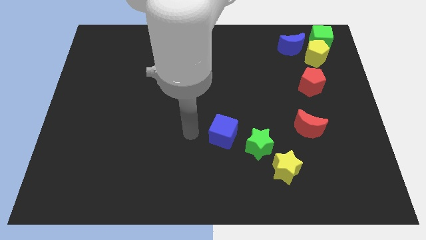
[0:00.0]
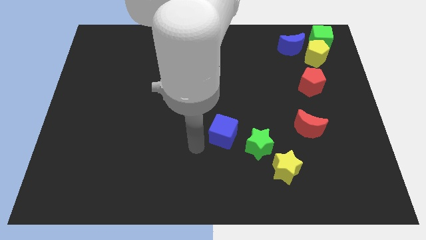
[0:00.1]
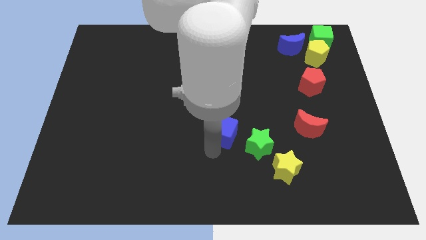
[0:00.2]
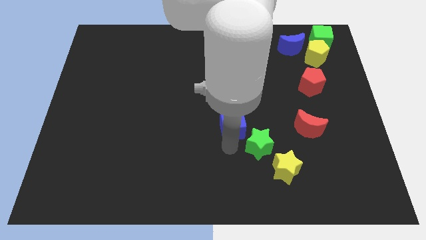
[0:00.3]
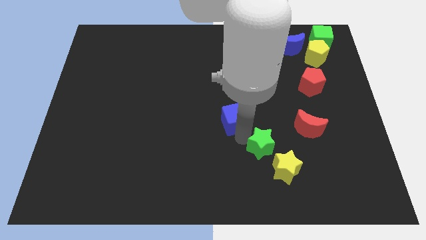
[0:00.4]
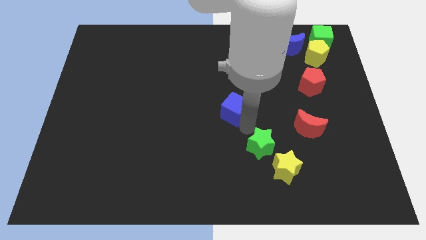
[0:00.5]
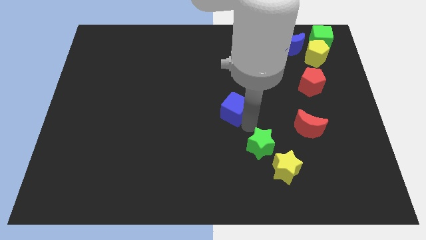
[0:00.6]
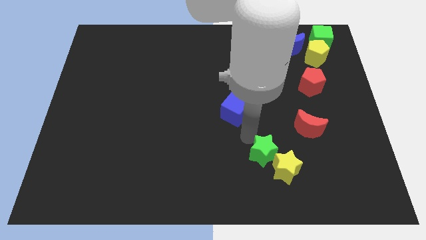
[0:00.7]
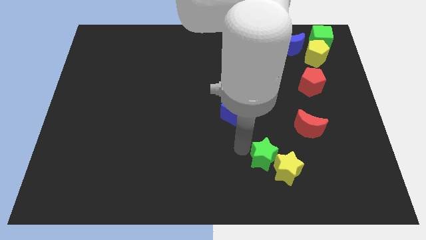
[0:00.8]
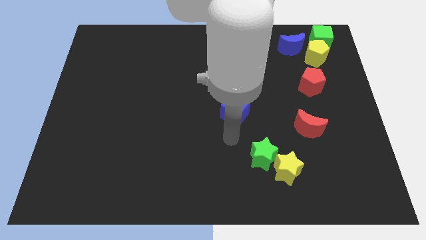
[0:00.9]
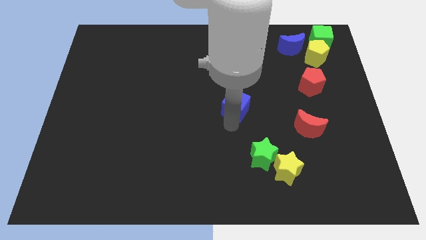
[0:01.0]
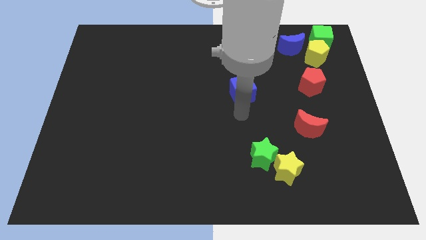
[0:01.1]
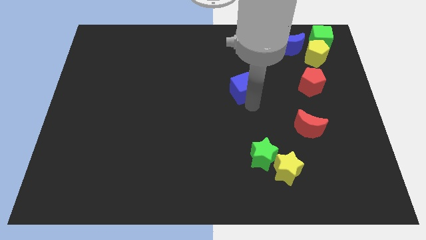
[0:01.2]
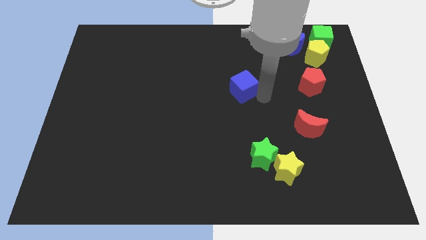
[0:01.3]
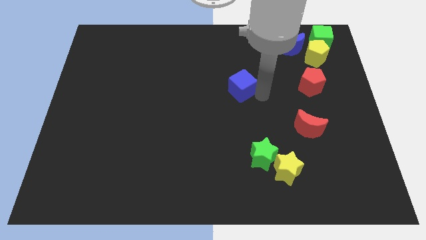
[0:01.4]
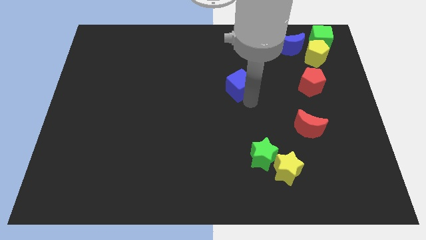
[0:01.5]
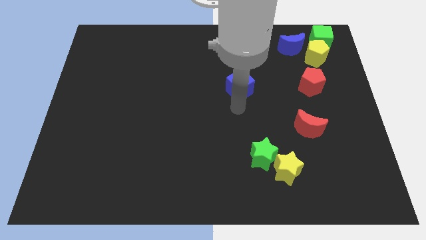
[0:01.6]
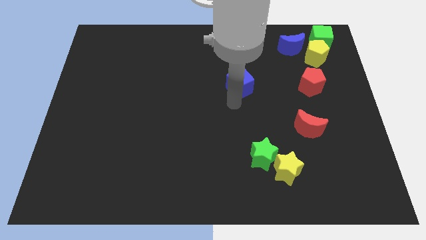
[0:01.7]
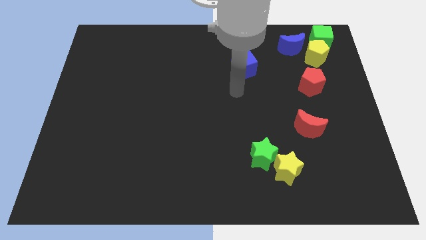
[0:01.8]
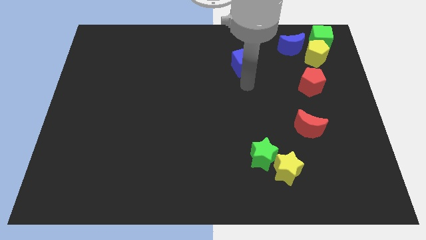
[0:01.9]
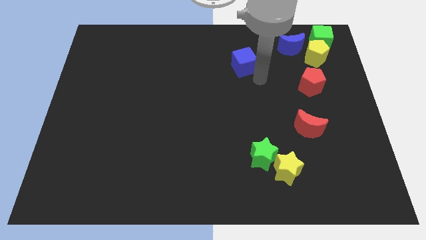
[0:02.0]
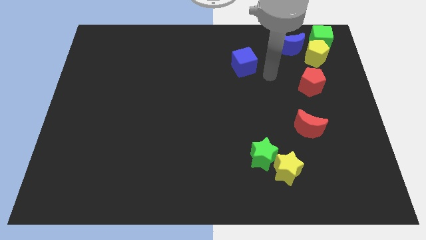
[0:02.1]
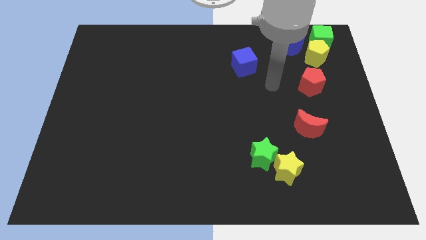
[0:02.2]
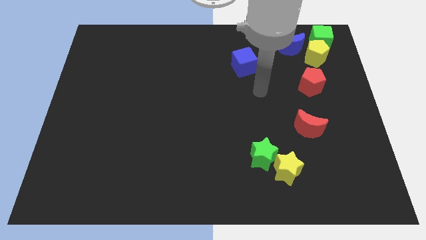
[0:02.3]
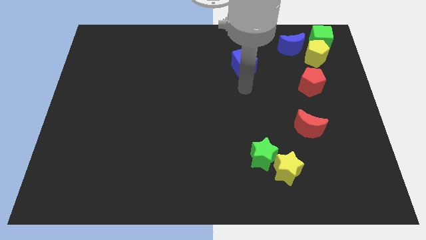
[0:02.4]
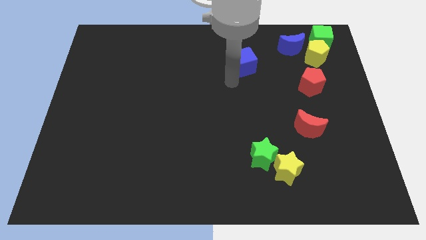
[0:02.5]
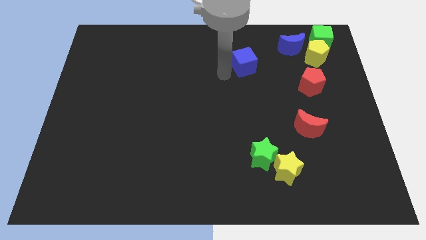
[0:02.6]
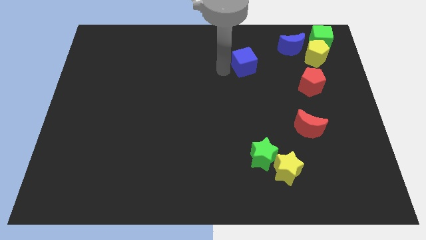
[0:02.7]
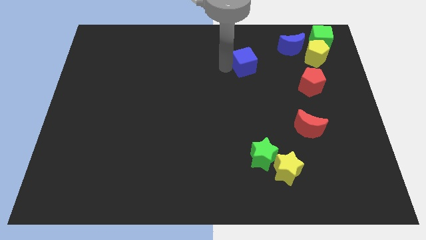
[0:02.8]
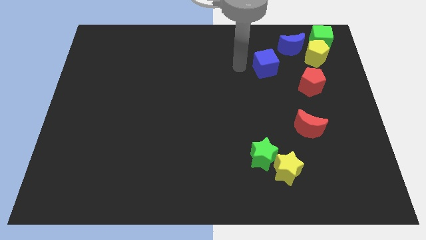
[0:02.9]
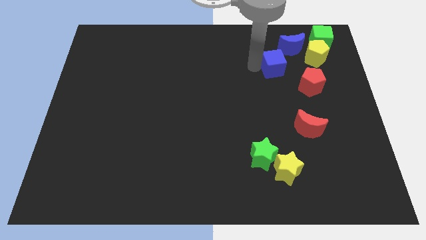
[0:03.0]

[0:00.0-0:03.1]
slide blue cube to top left of red pentagon

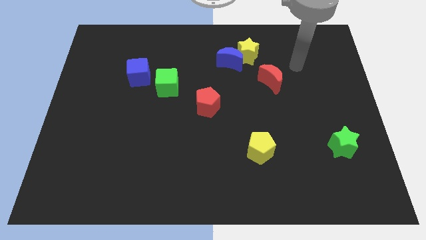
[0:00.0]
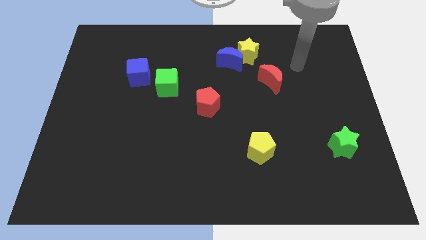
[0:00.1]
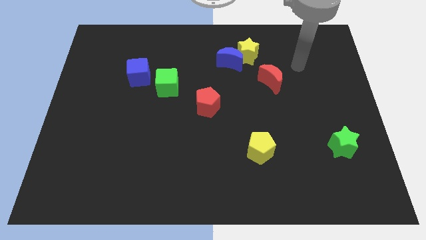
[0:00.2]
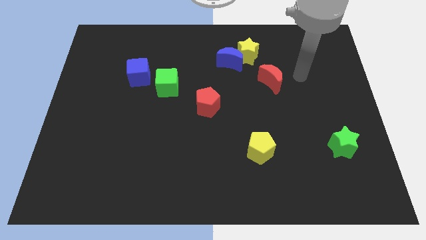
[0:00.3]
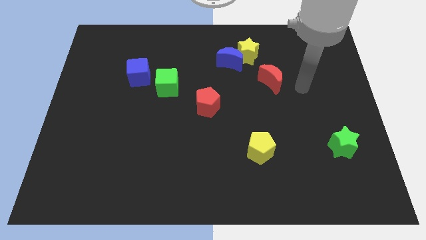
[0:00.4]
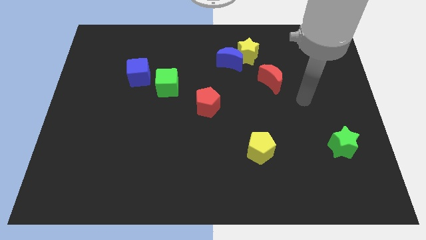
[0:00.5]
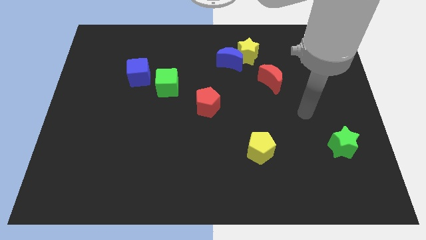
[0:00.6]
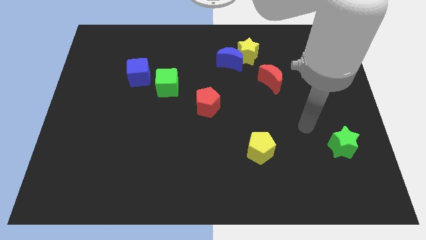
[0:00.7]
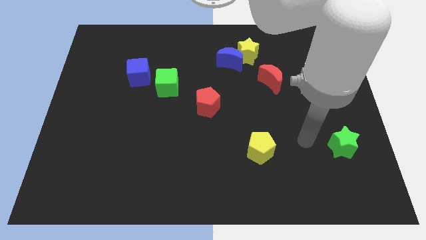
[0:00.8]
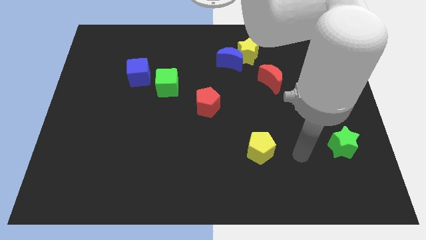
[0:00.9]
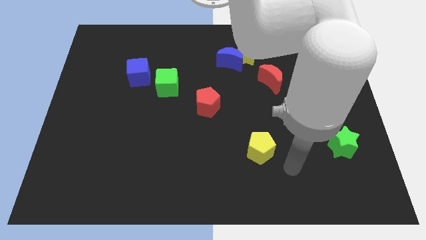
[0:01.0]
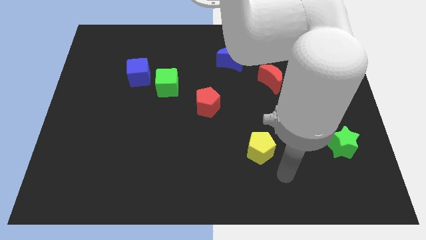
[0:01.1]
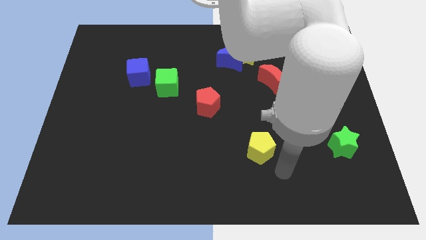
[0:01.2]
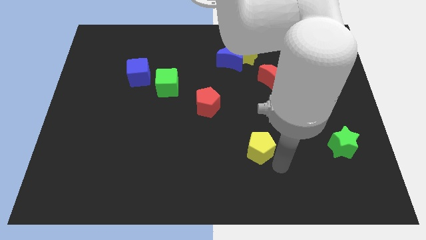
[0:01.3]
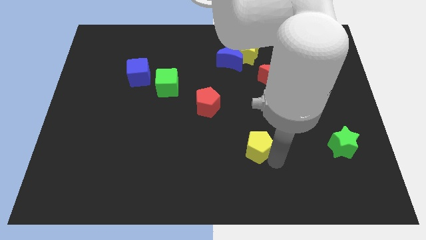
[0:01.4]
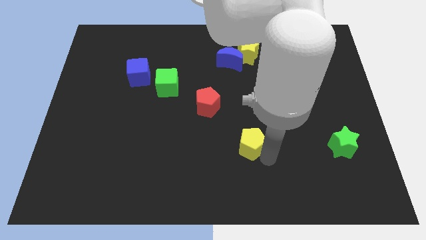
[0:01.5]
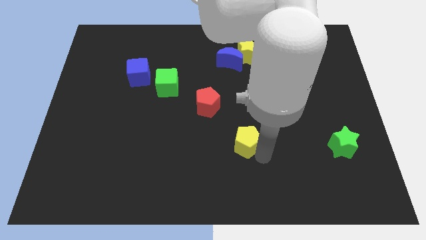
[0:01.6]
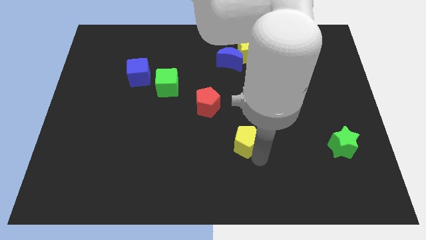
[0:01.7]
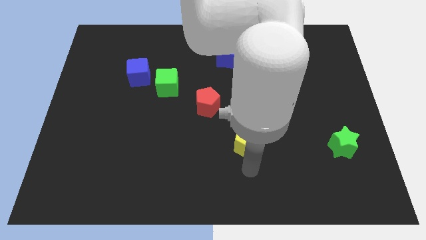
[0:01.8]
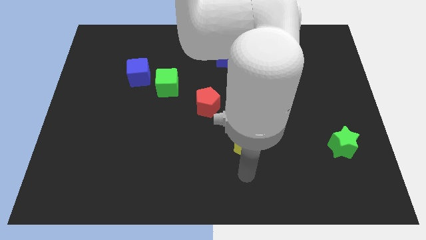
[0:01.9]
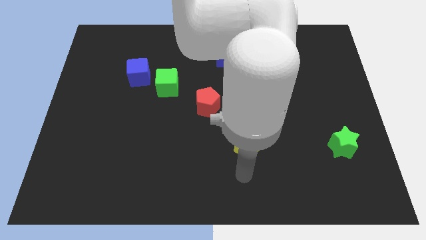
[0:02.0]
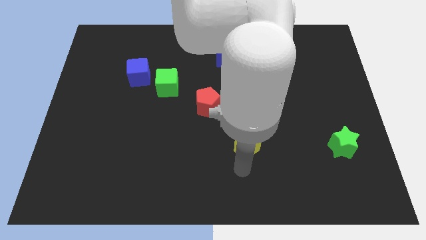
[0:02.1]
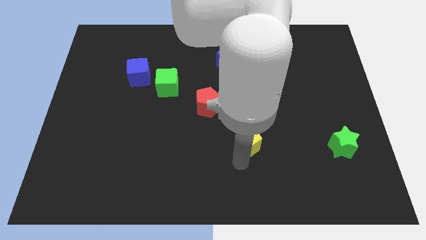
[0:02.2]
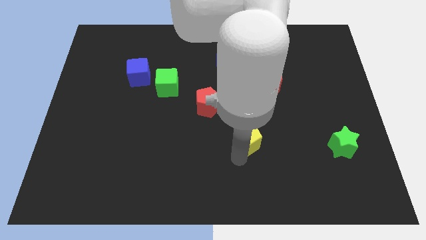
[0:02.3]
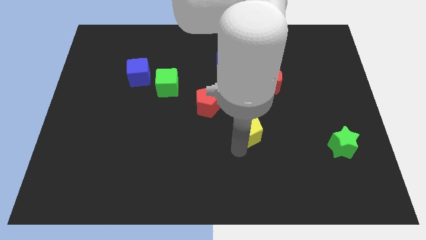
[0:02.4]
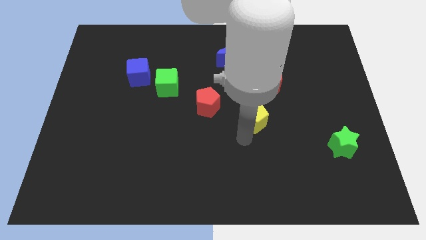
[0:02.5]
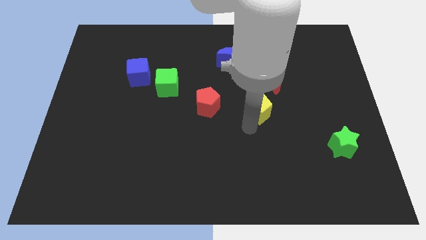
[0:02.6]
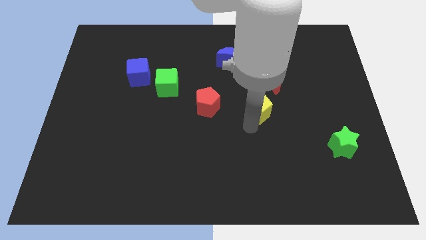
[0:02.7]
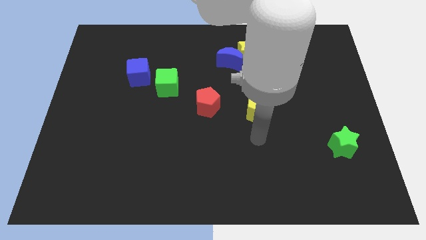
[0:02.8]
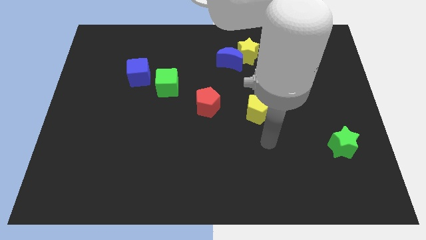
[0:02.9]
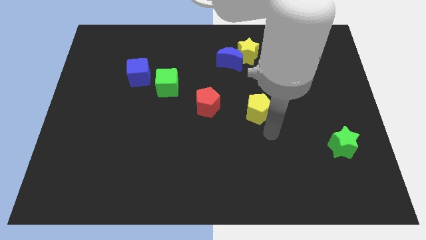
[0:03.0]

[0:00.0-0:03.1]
move the yellow pentagon towards red crescent

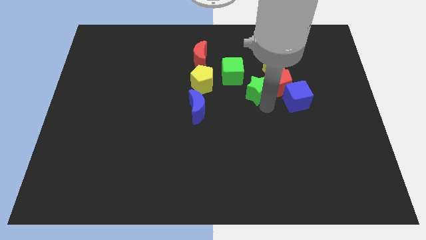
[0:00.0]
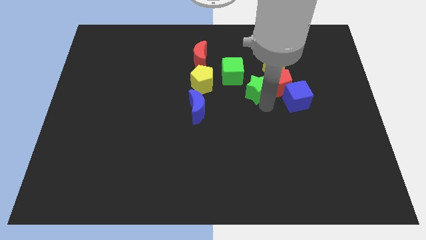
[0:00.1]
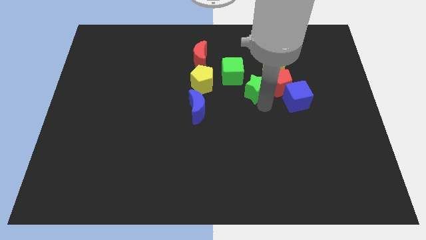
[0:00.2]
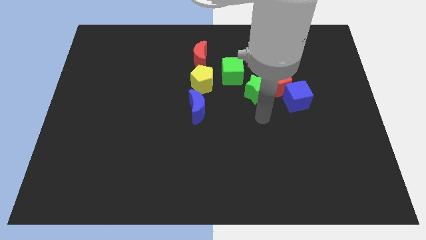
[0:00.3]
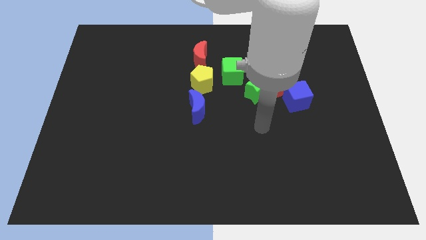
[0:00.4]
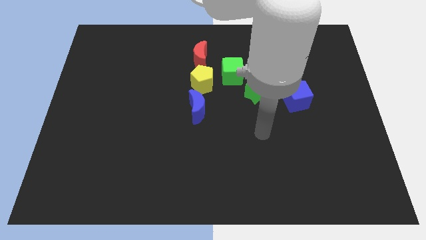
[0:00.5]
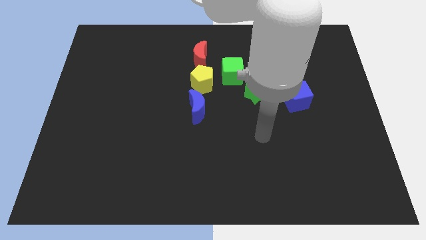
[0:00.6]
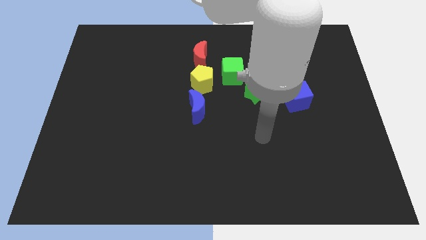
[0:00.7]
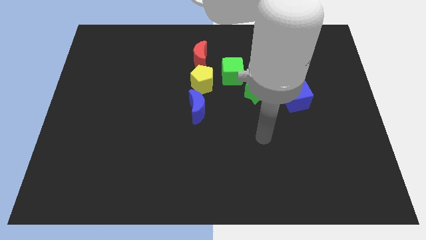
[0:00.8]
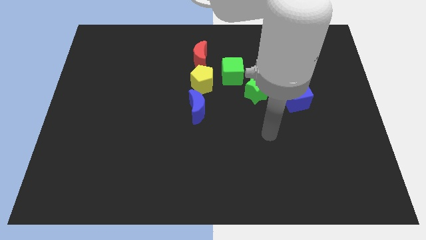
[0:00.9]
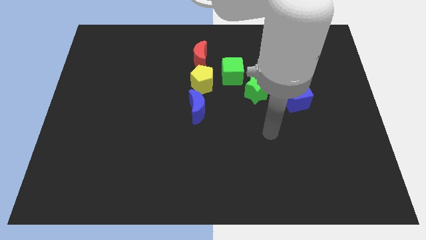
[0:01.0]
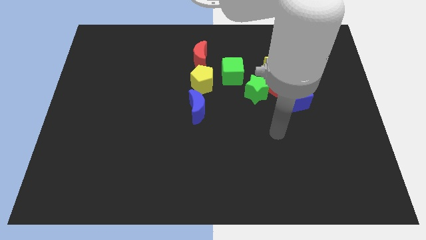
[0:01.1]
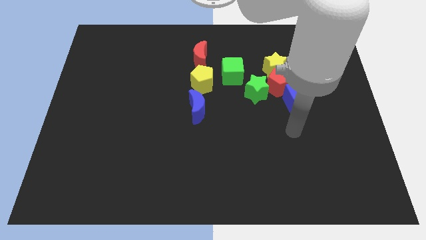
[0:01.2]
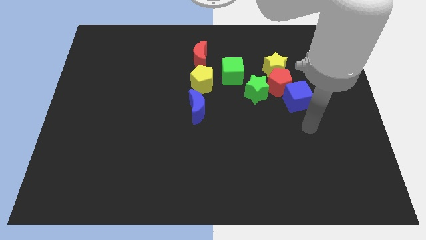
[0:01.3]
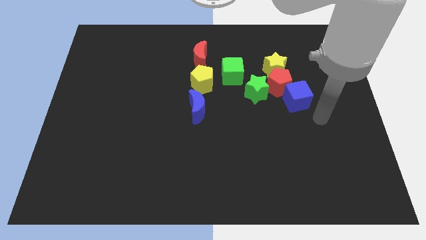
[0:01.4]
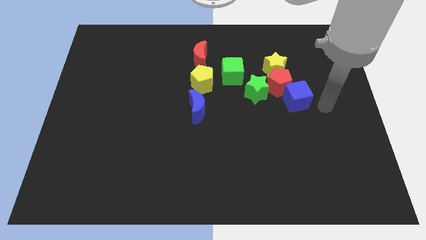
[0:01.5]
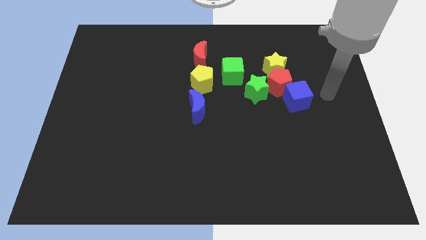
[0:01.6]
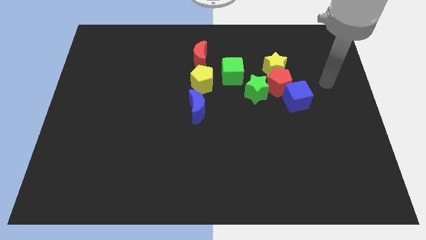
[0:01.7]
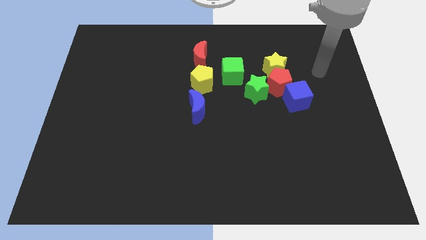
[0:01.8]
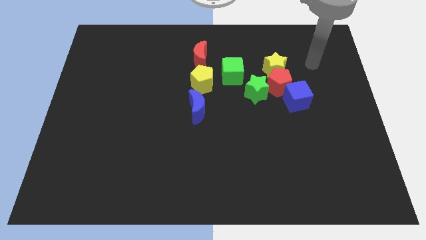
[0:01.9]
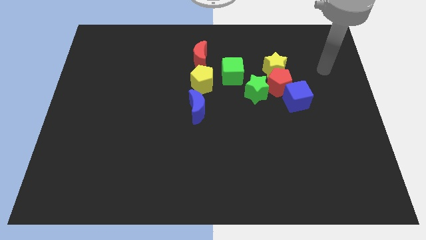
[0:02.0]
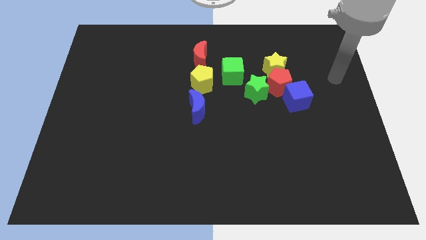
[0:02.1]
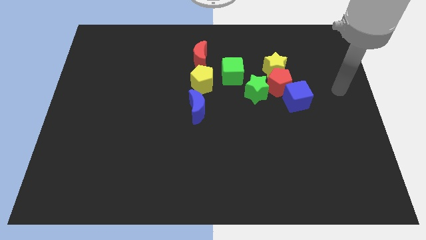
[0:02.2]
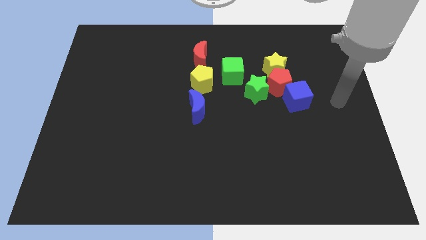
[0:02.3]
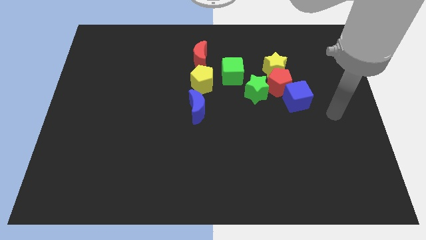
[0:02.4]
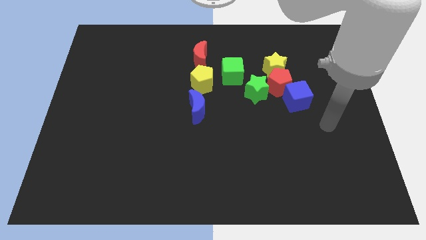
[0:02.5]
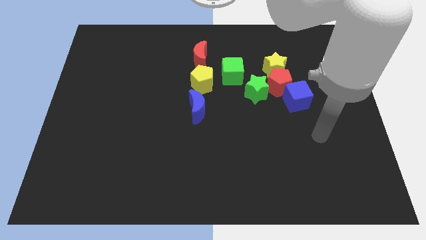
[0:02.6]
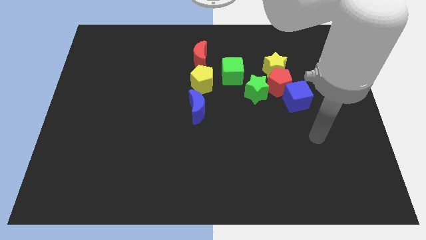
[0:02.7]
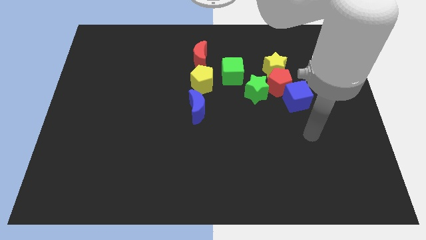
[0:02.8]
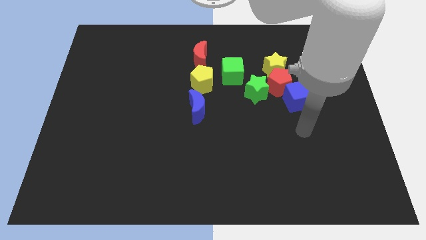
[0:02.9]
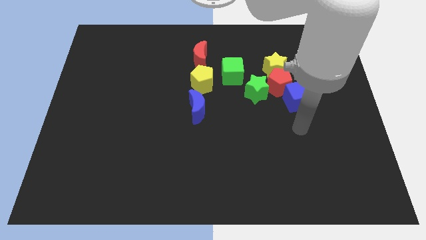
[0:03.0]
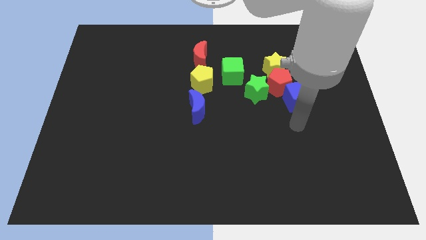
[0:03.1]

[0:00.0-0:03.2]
place the arm down to the blue cube
